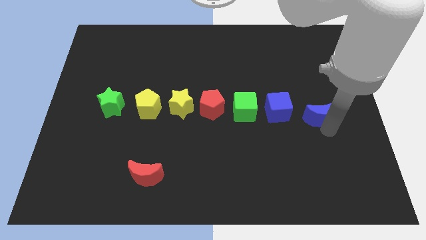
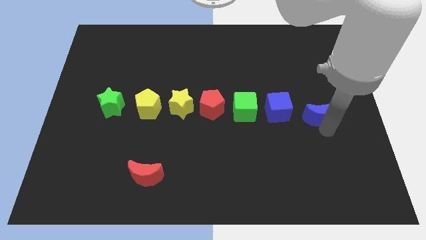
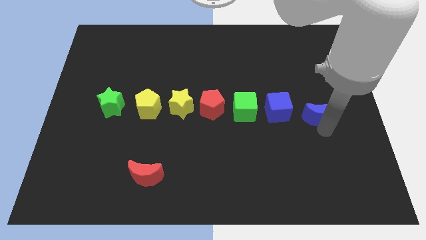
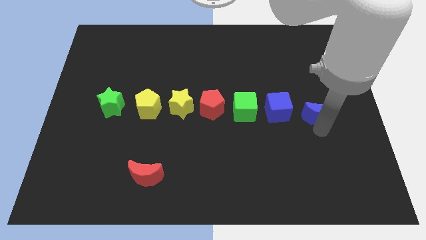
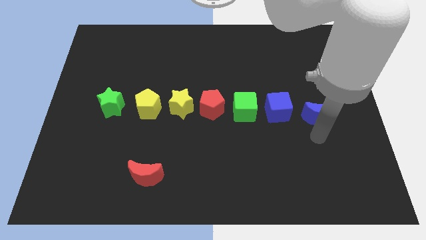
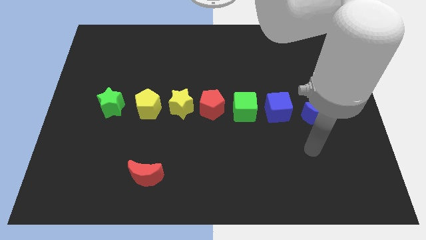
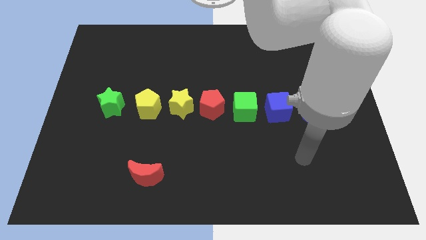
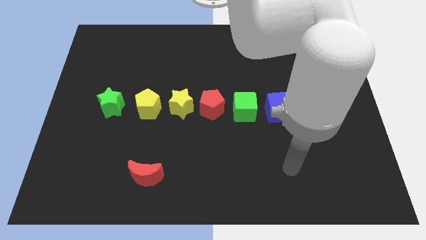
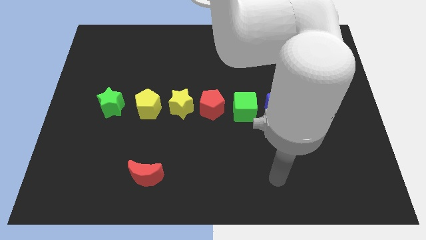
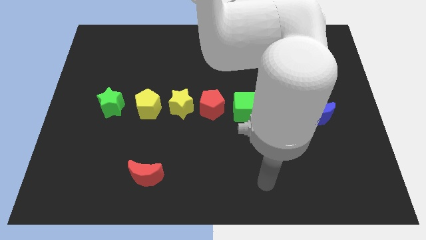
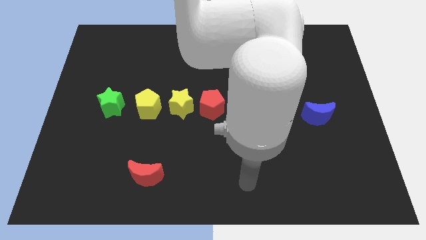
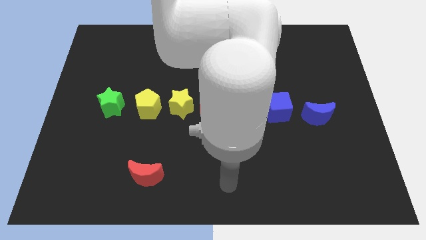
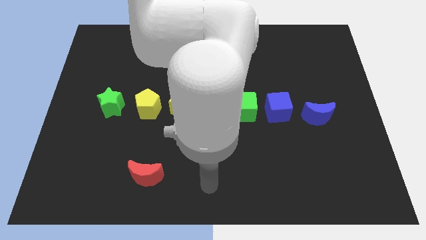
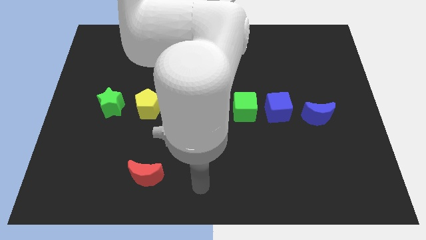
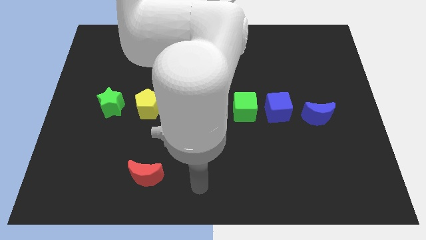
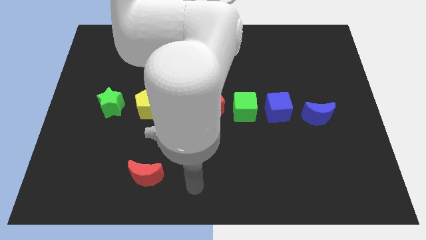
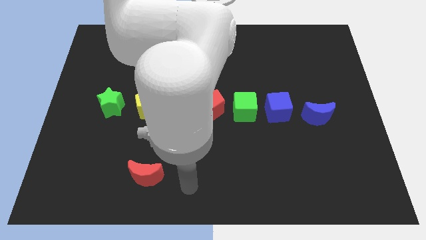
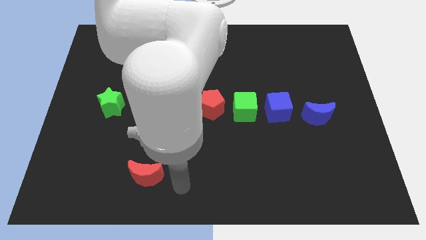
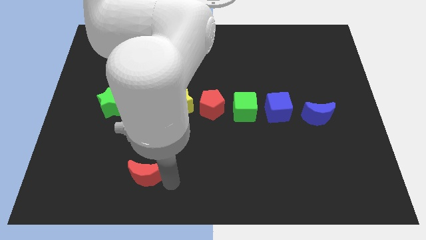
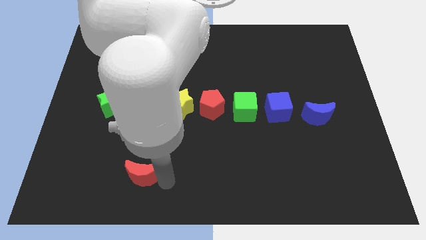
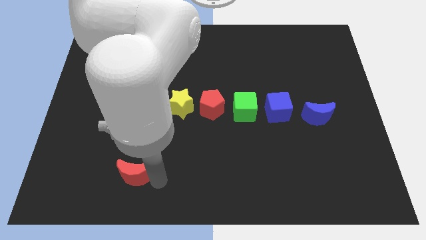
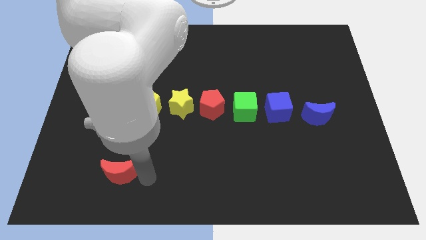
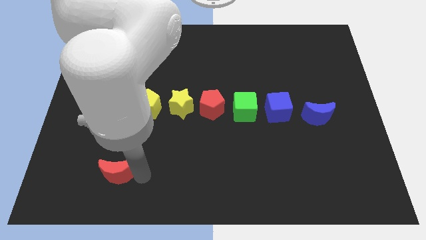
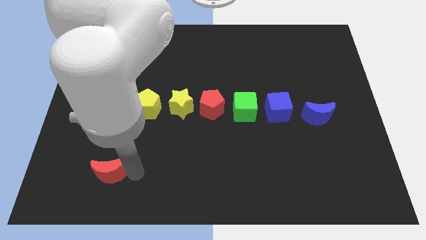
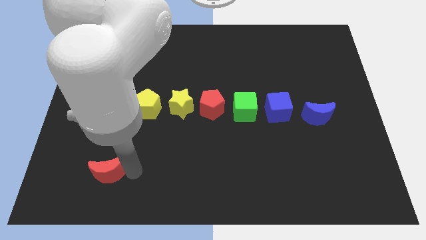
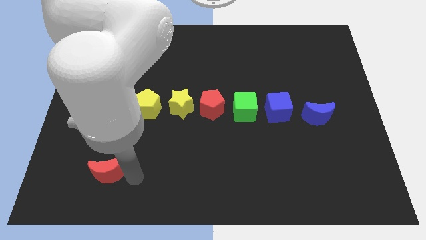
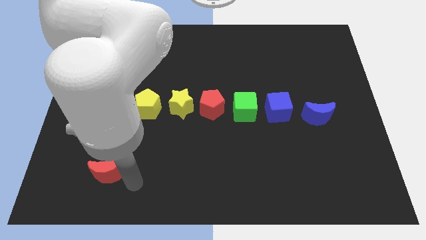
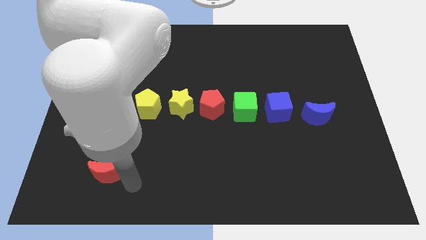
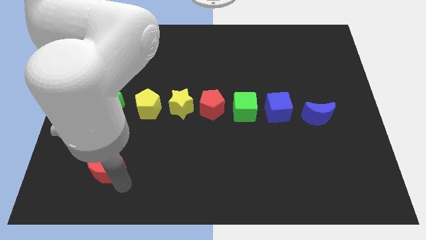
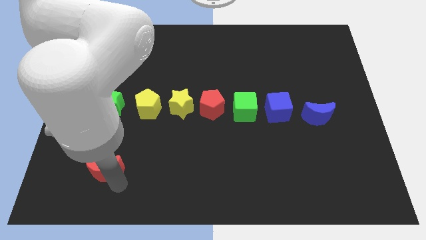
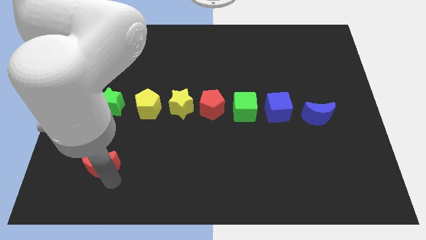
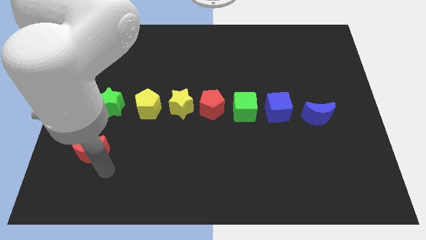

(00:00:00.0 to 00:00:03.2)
move the red crescent at the bottom of the green star vertically

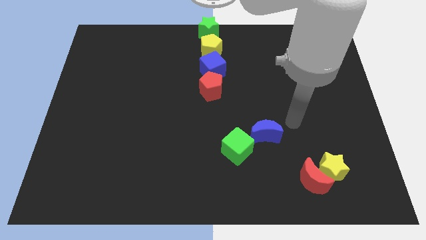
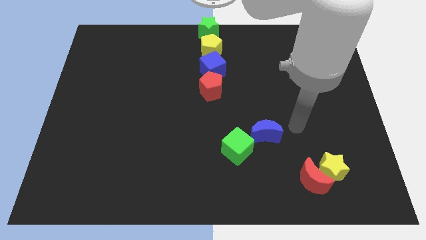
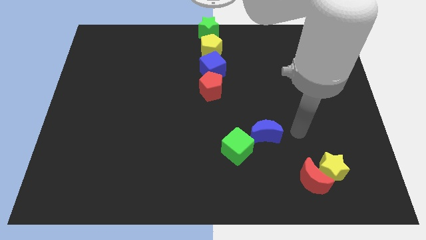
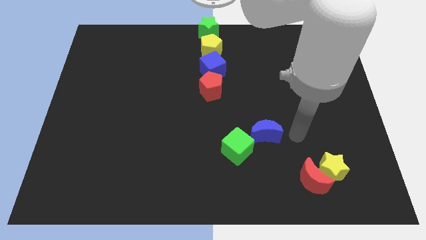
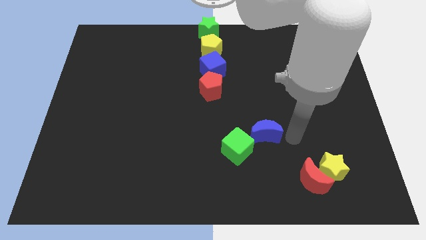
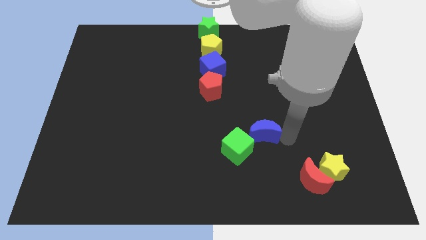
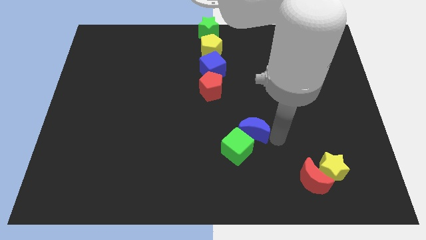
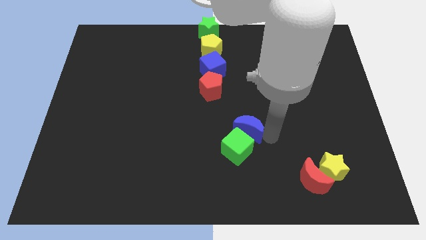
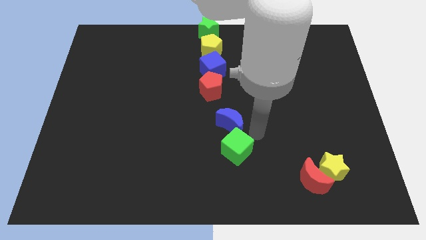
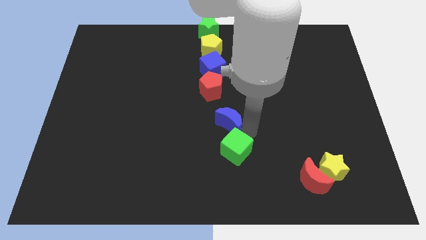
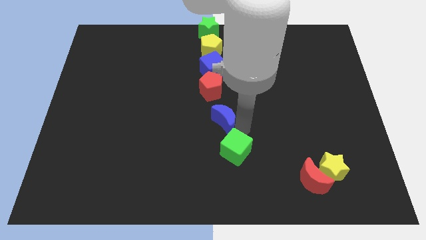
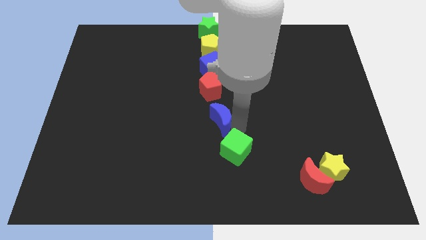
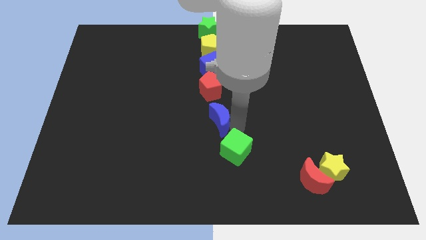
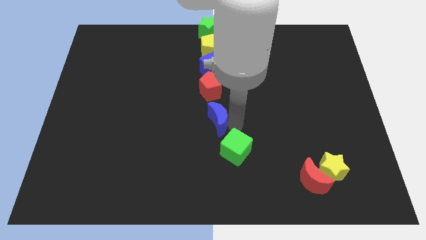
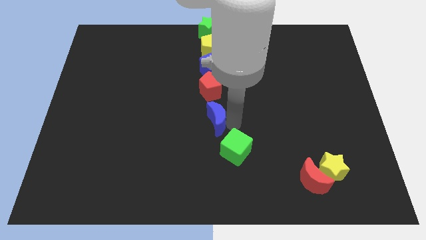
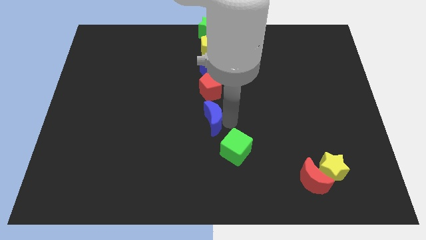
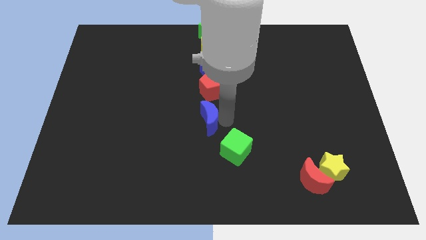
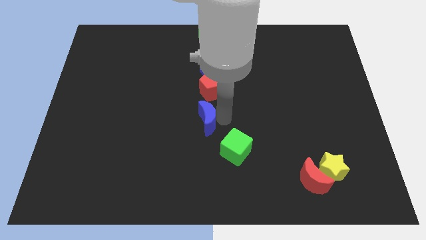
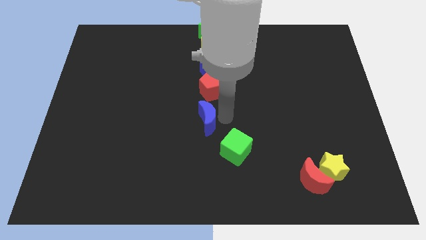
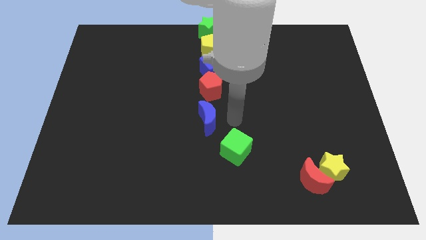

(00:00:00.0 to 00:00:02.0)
place the blue crescent under the red pentagon

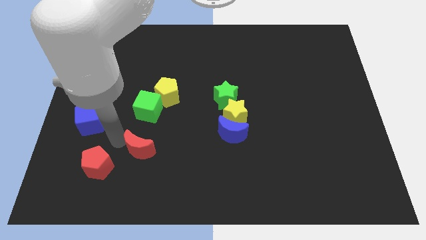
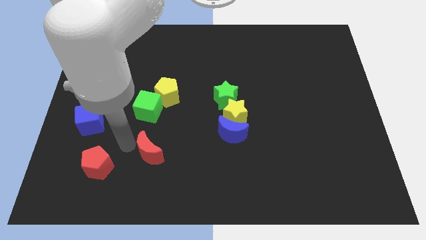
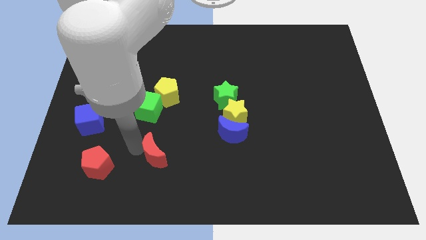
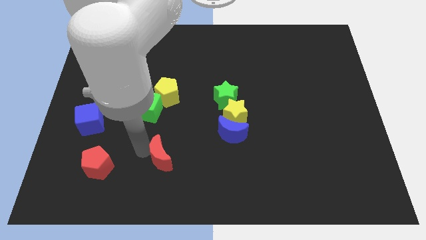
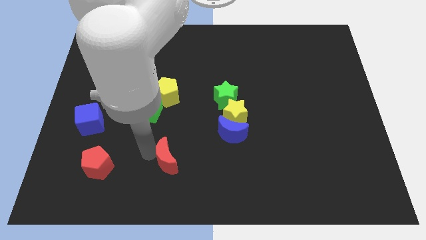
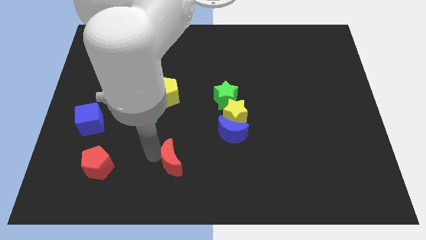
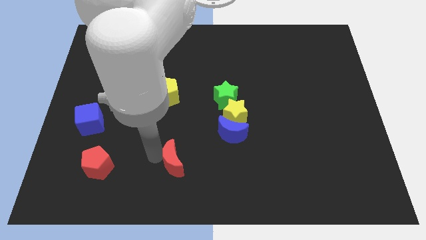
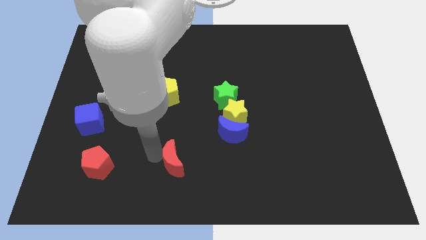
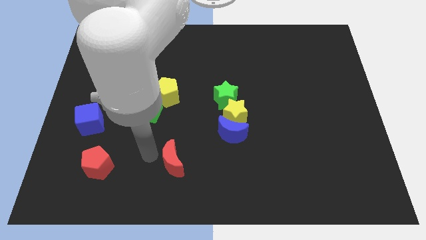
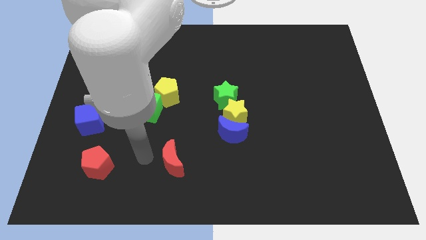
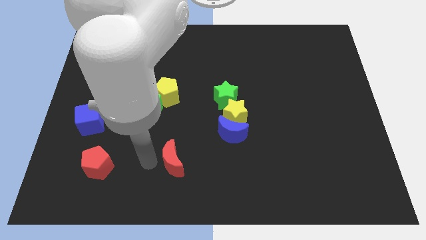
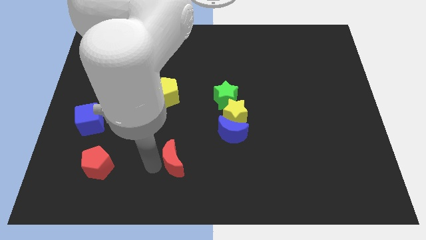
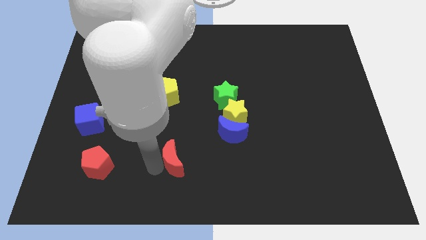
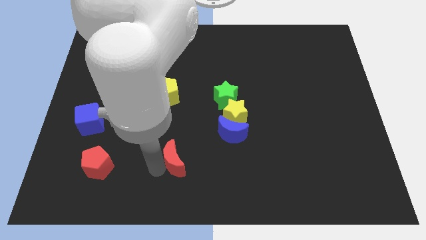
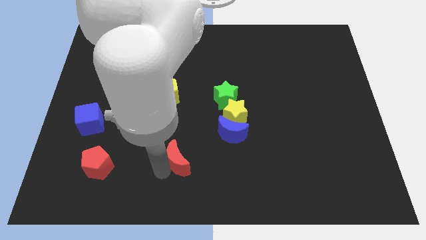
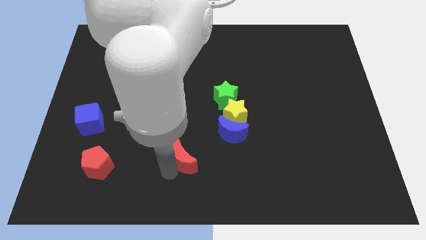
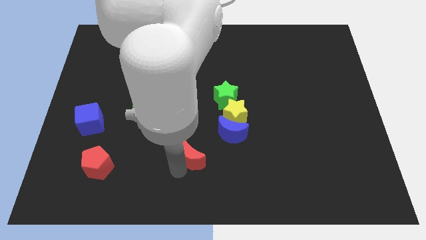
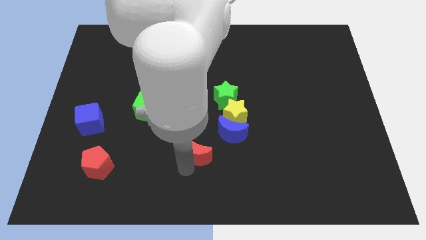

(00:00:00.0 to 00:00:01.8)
move the red crescent to the bottom left of the blue crescent

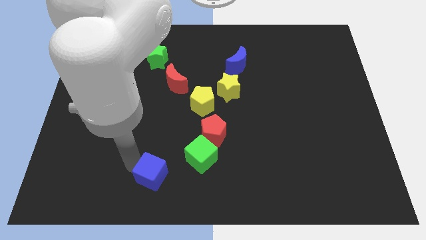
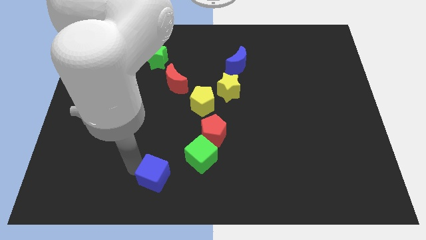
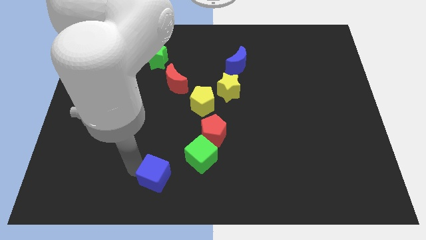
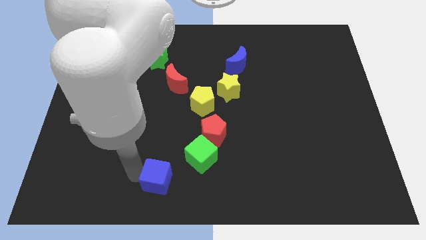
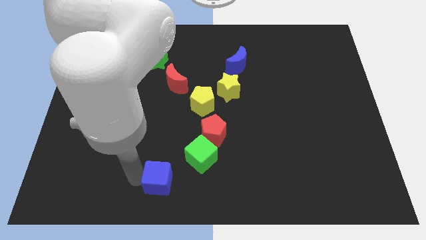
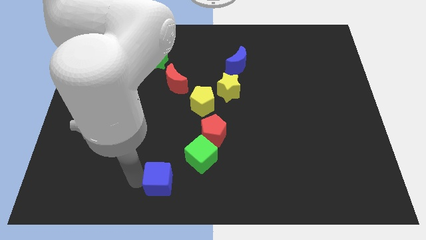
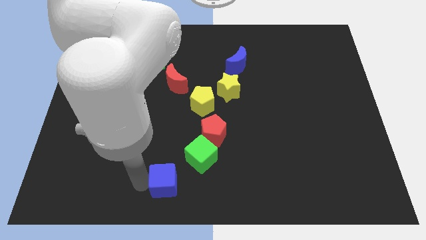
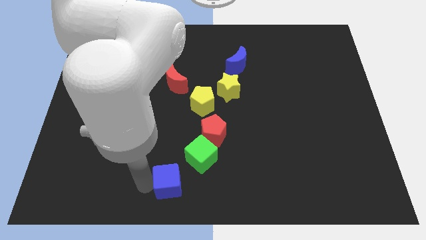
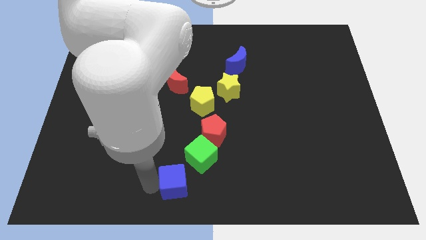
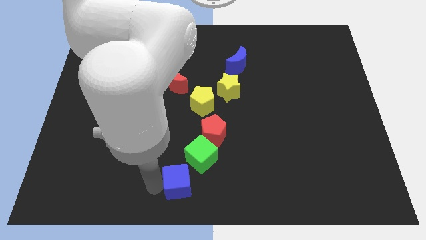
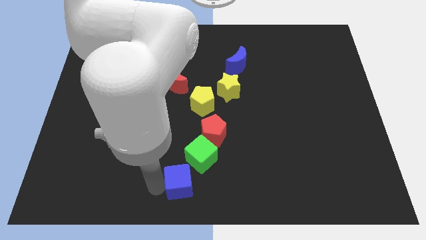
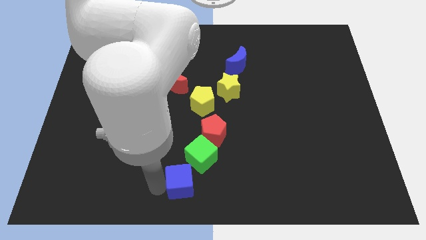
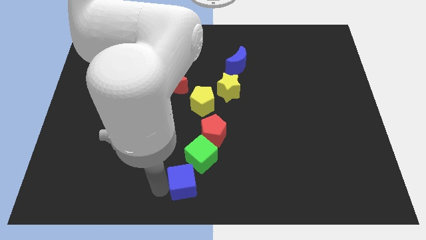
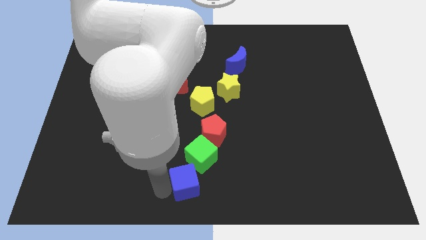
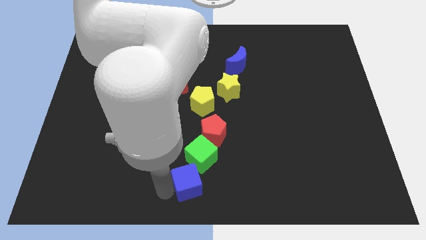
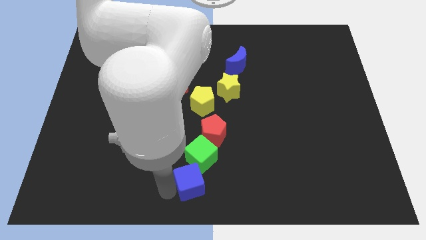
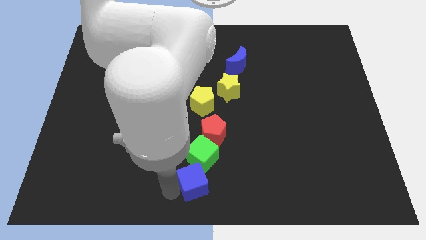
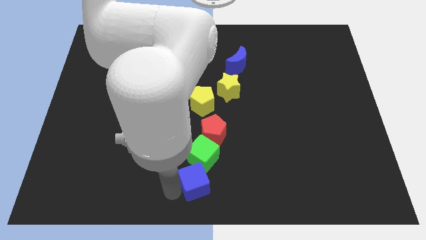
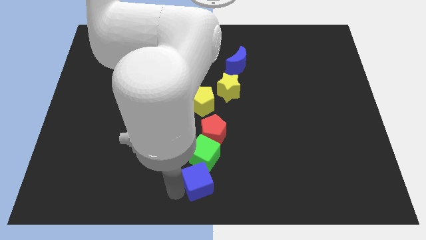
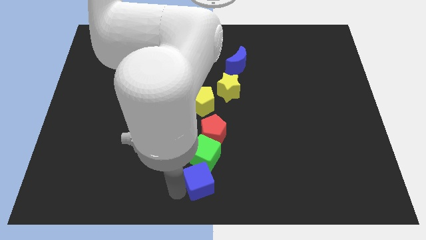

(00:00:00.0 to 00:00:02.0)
move the blue cube into the green cube
